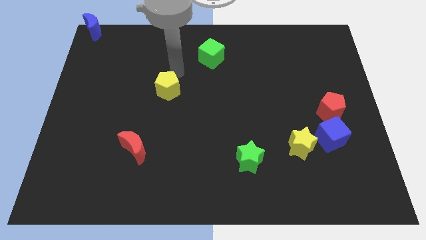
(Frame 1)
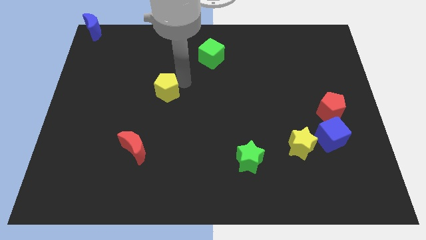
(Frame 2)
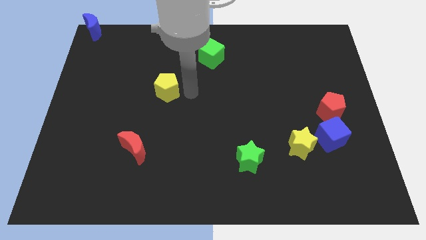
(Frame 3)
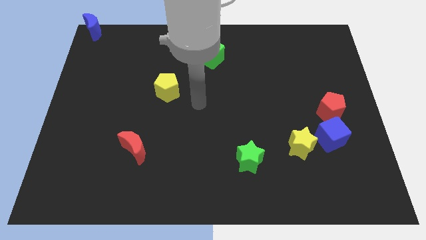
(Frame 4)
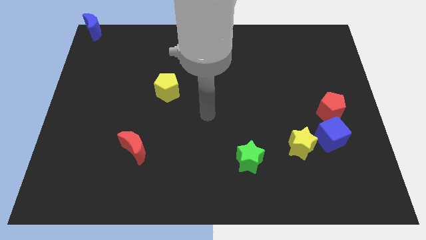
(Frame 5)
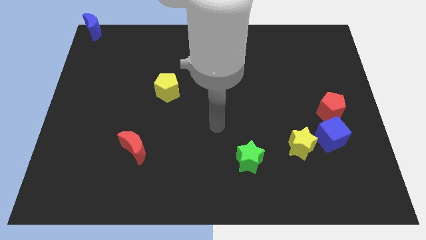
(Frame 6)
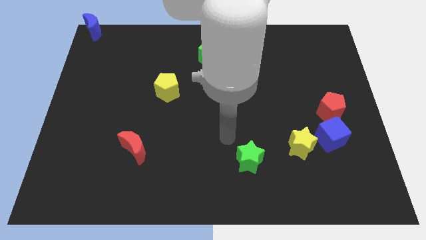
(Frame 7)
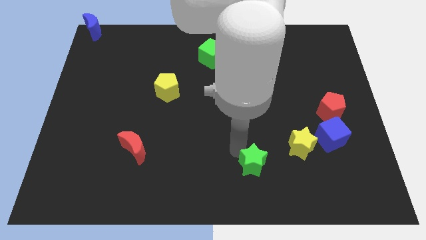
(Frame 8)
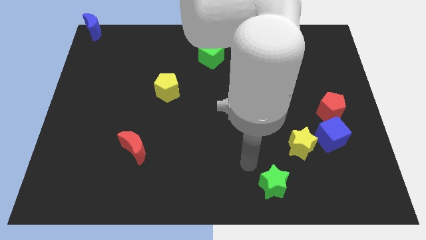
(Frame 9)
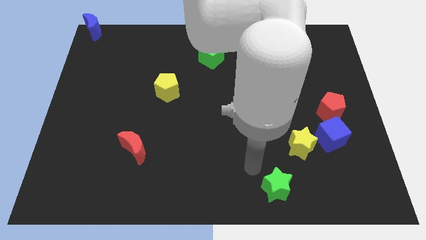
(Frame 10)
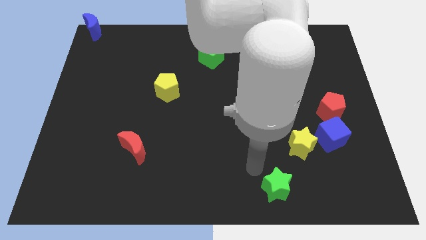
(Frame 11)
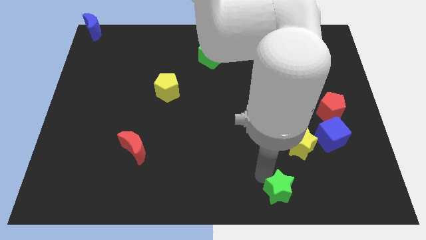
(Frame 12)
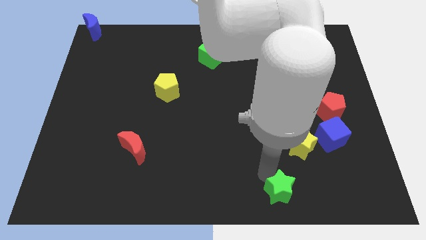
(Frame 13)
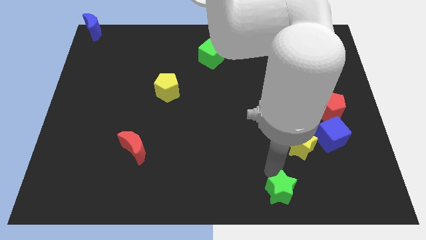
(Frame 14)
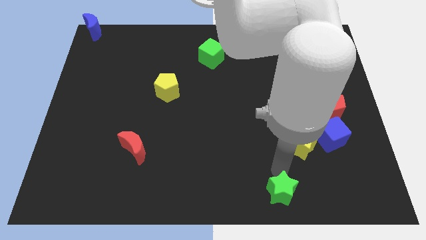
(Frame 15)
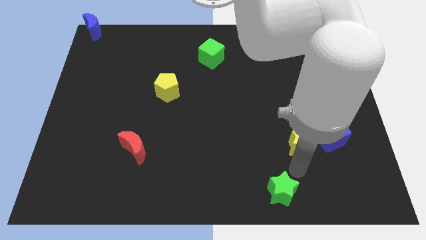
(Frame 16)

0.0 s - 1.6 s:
push the green star slightly to the bottom side of the table

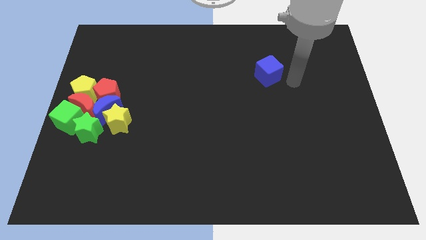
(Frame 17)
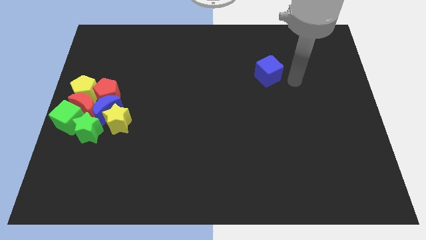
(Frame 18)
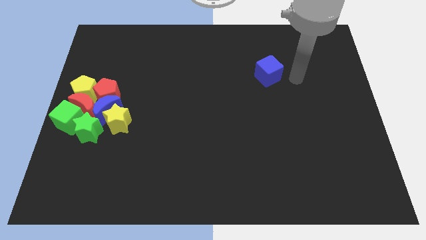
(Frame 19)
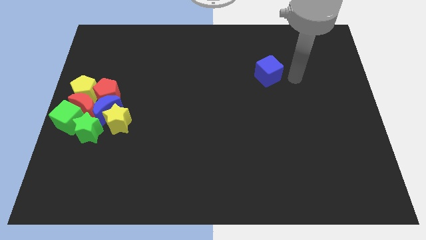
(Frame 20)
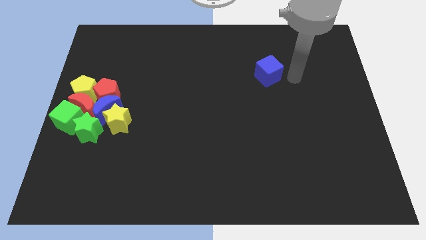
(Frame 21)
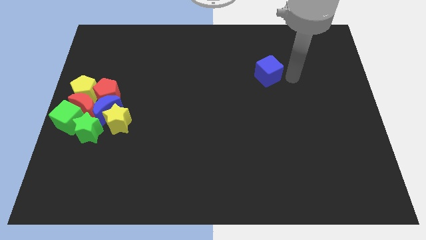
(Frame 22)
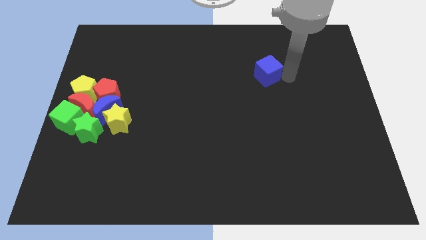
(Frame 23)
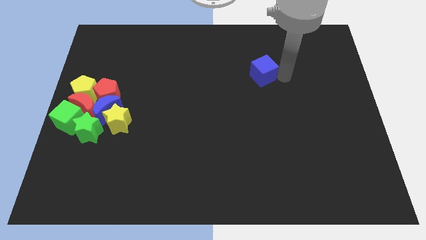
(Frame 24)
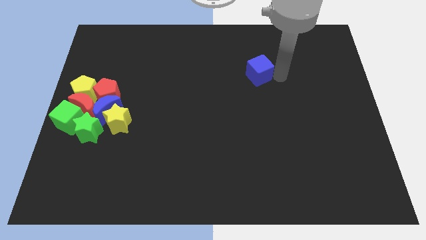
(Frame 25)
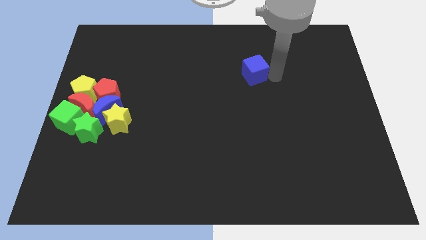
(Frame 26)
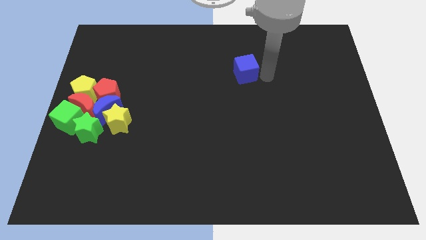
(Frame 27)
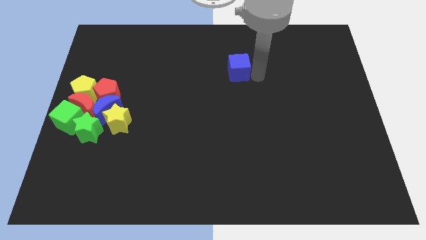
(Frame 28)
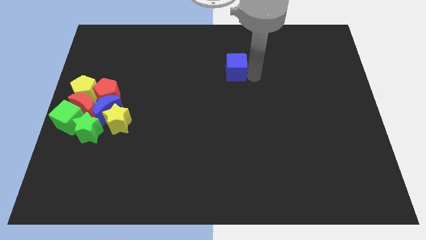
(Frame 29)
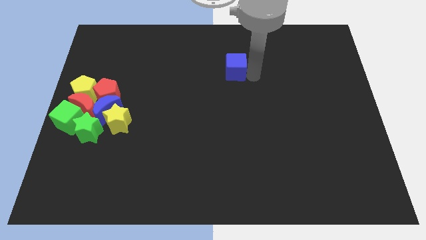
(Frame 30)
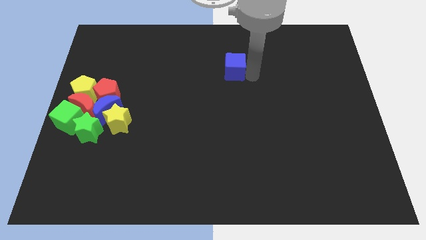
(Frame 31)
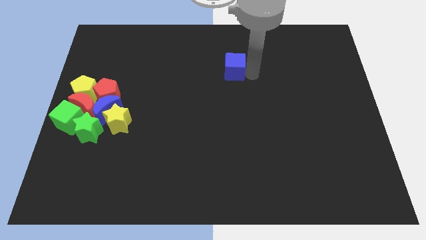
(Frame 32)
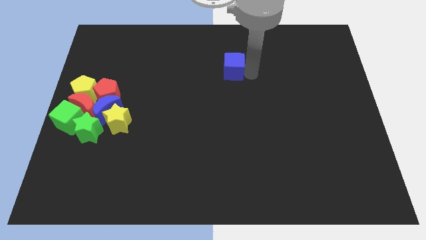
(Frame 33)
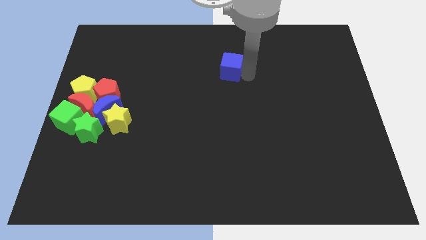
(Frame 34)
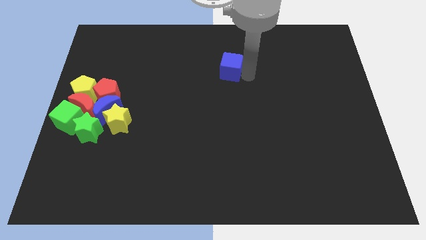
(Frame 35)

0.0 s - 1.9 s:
push the blue cube slightly towards left

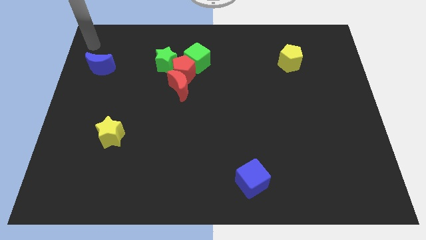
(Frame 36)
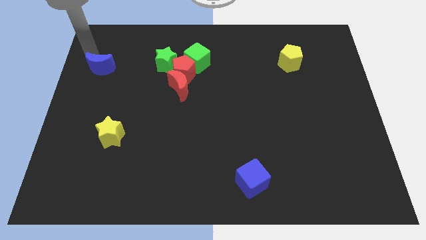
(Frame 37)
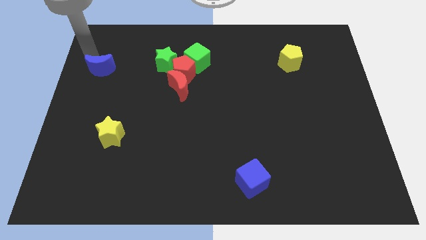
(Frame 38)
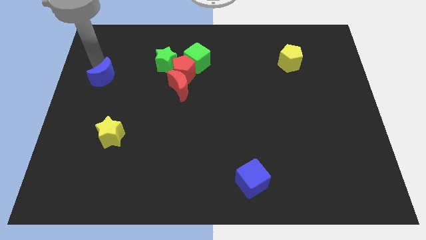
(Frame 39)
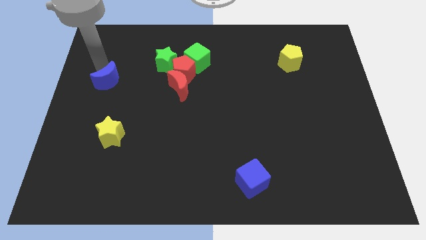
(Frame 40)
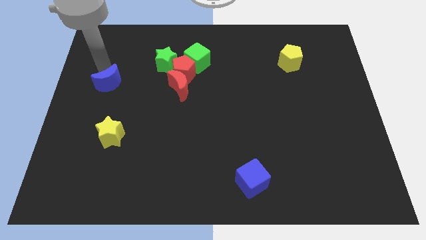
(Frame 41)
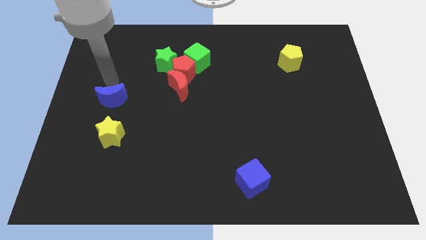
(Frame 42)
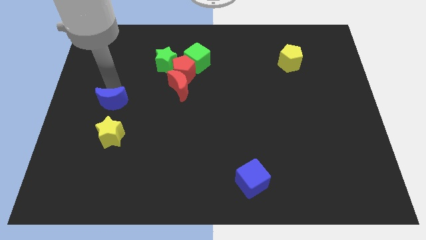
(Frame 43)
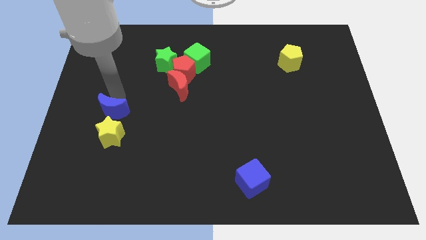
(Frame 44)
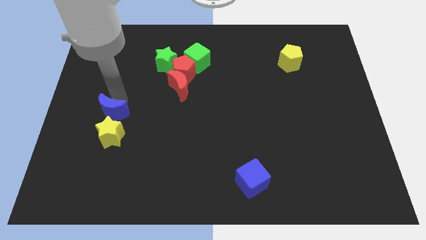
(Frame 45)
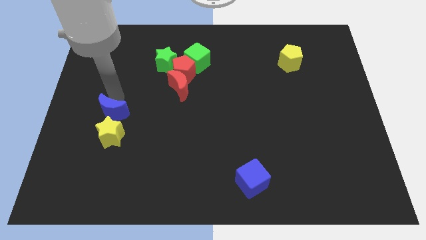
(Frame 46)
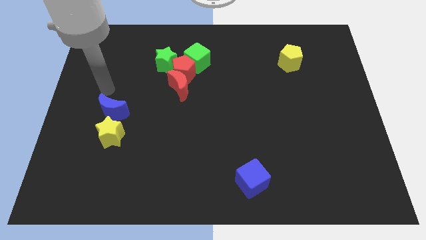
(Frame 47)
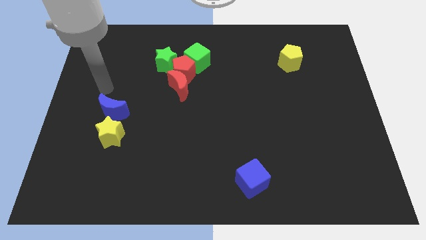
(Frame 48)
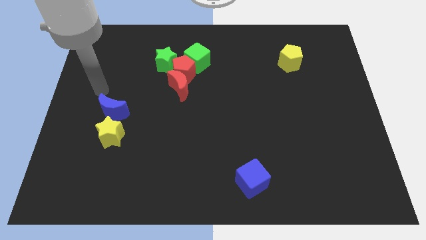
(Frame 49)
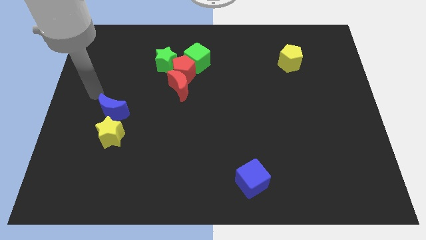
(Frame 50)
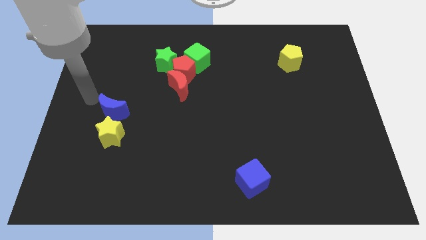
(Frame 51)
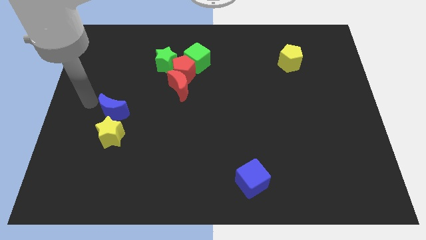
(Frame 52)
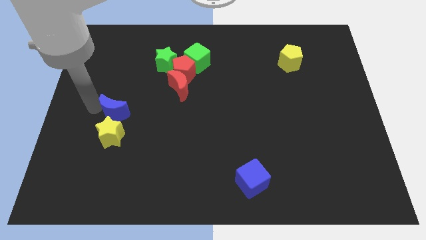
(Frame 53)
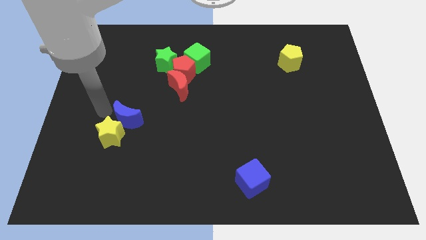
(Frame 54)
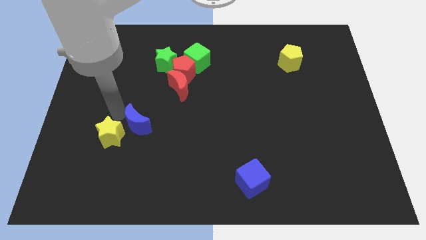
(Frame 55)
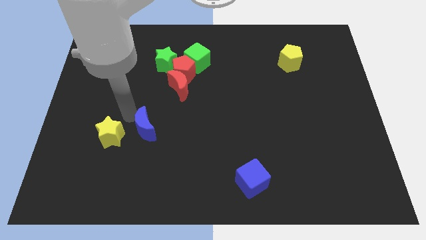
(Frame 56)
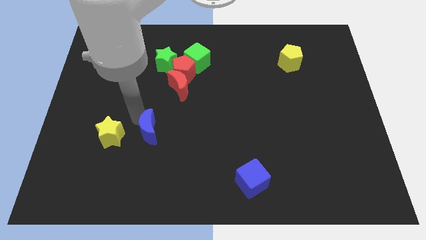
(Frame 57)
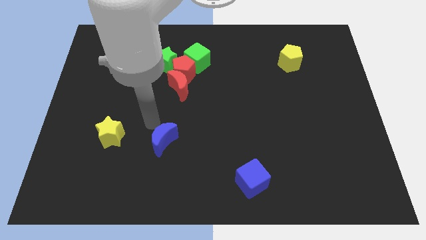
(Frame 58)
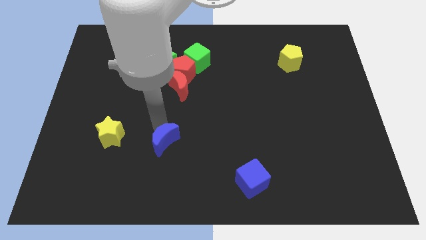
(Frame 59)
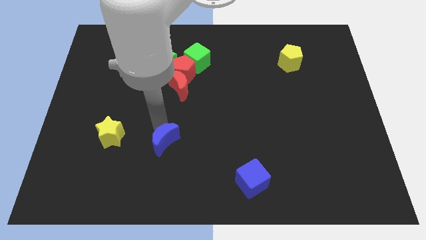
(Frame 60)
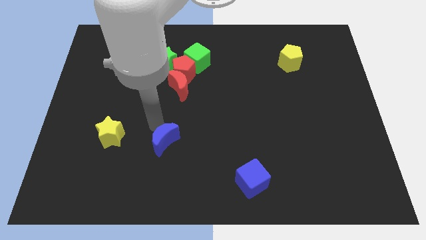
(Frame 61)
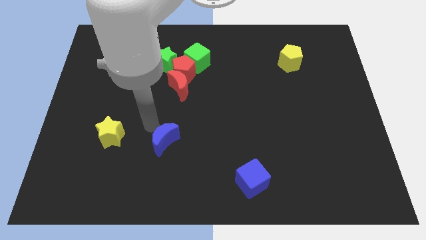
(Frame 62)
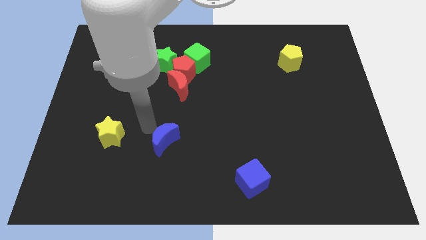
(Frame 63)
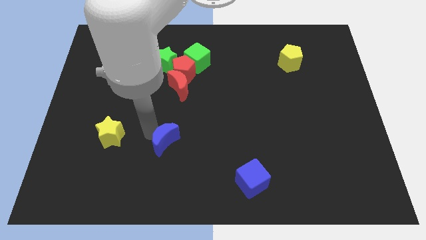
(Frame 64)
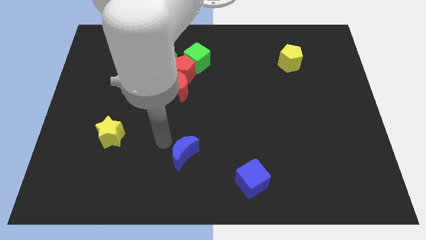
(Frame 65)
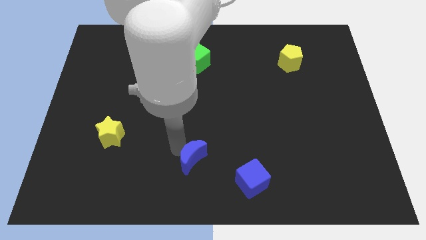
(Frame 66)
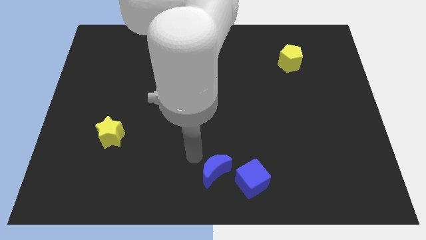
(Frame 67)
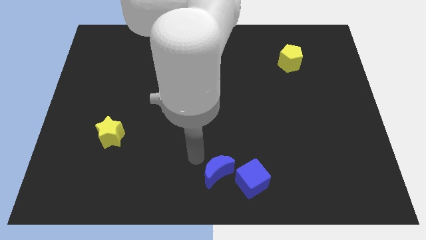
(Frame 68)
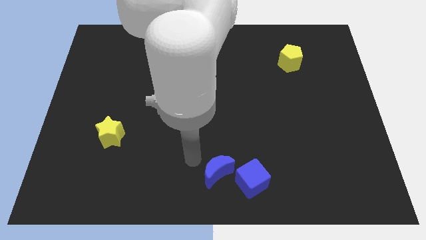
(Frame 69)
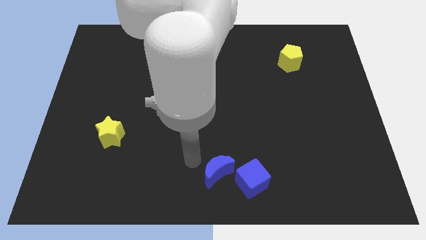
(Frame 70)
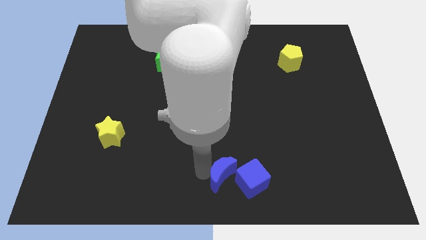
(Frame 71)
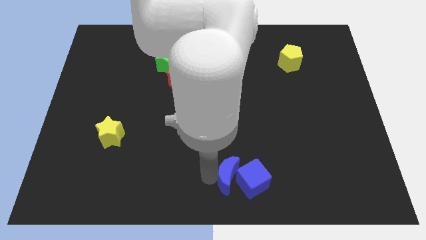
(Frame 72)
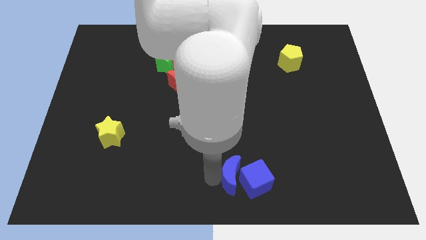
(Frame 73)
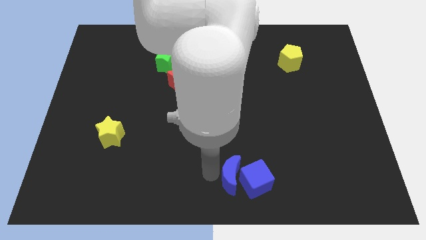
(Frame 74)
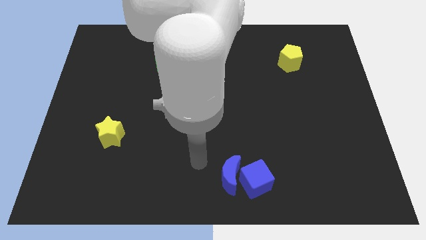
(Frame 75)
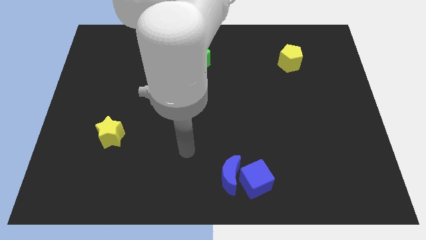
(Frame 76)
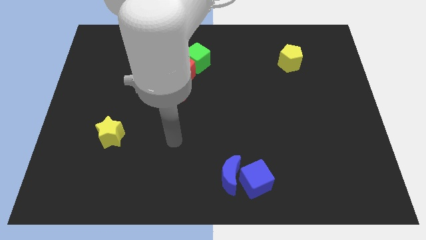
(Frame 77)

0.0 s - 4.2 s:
push the blue crescent into the blue cube

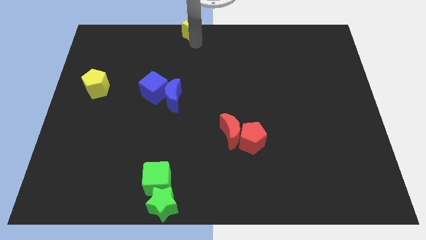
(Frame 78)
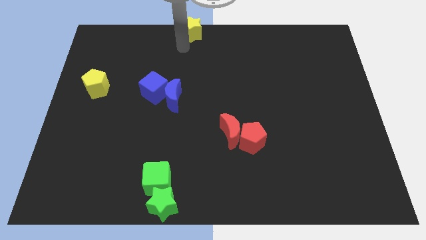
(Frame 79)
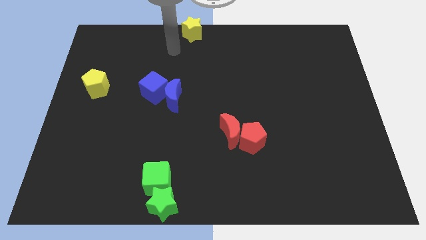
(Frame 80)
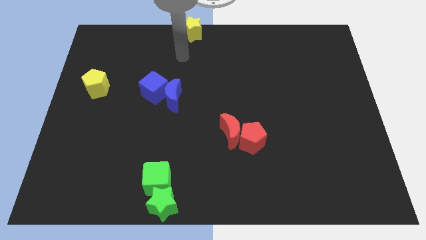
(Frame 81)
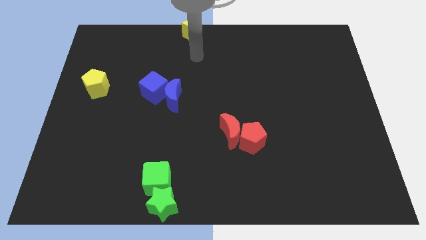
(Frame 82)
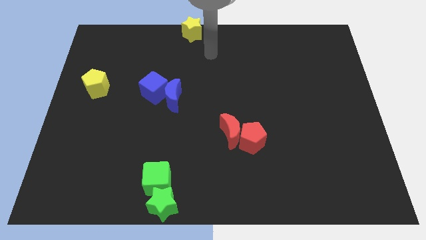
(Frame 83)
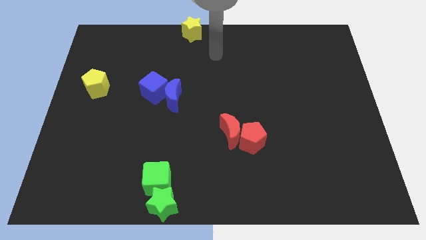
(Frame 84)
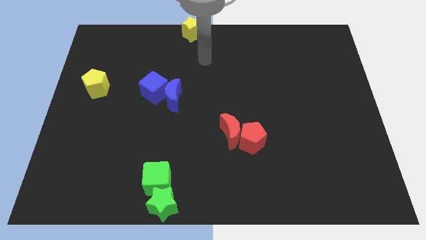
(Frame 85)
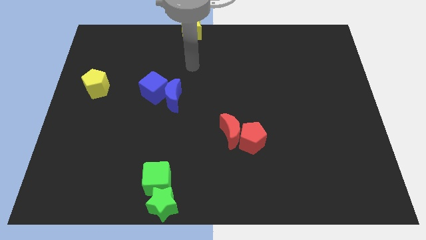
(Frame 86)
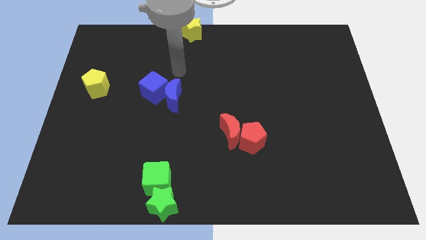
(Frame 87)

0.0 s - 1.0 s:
move your arm away from yellow star

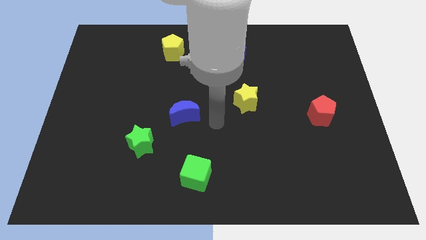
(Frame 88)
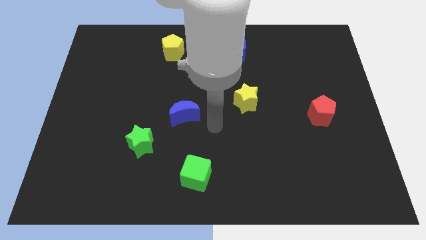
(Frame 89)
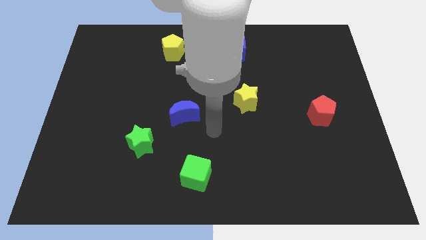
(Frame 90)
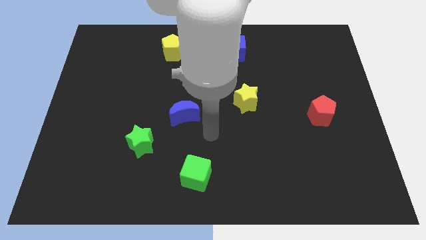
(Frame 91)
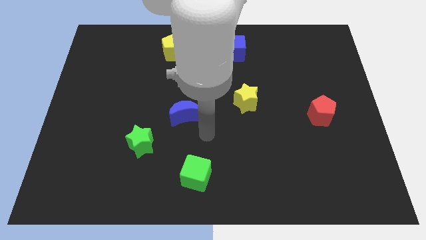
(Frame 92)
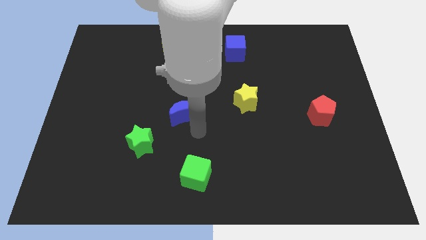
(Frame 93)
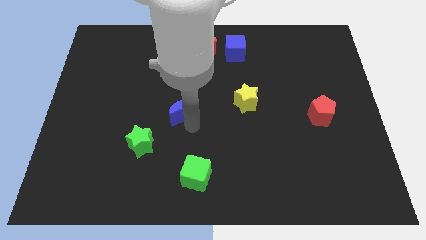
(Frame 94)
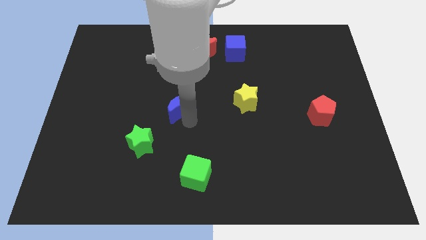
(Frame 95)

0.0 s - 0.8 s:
place arm on the bottom of blue moon
